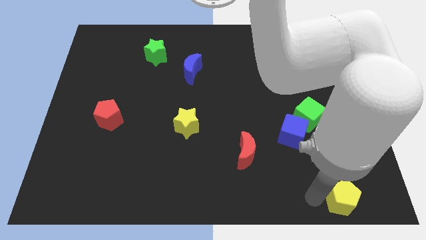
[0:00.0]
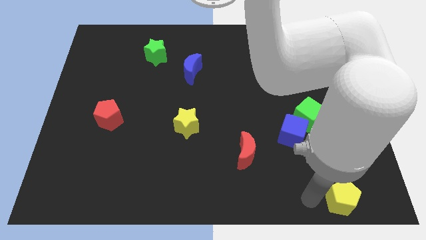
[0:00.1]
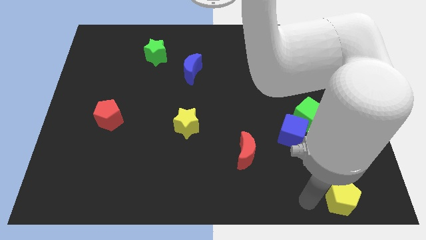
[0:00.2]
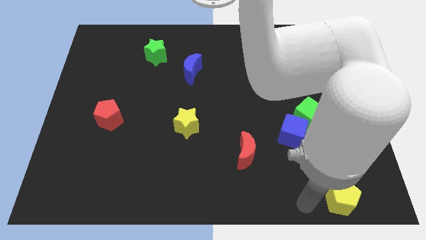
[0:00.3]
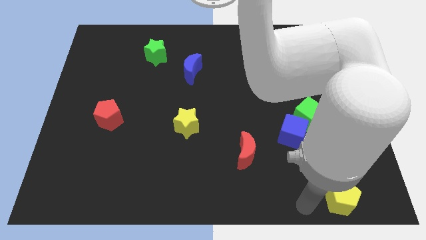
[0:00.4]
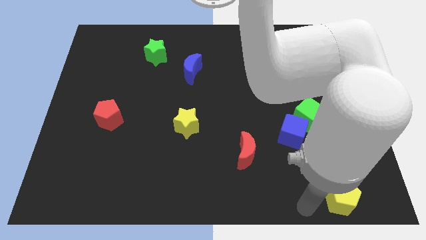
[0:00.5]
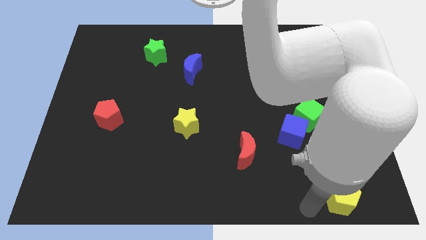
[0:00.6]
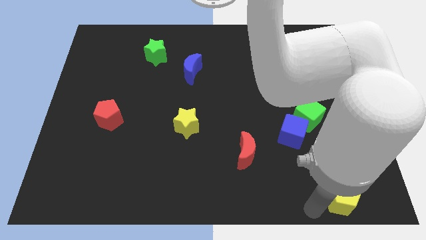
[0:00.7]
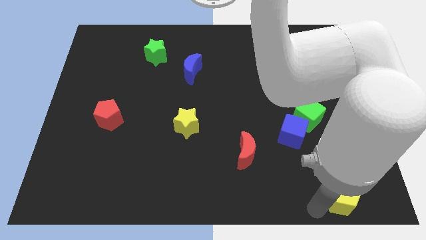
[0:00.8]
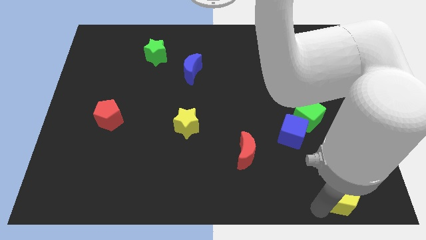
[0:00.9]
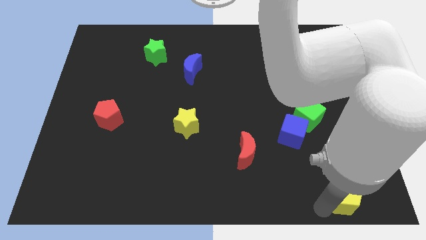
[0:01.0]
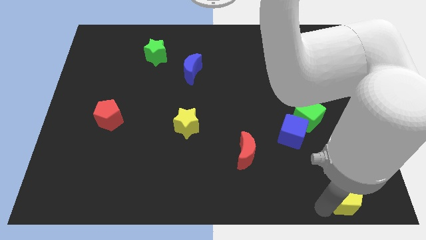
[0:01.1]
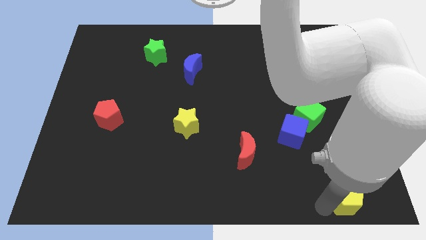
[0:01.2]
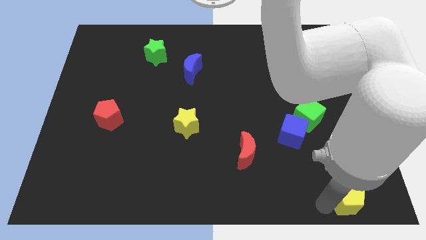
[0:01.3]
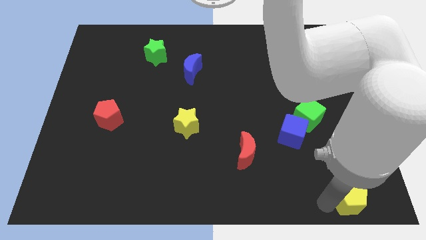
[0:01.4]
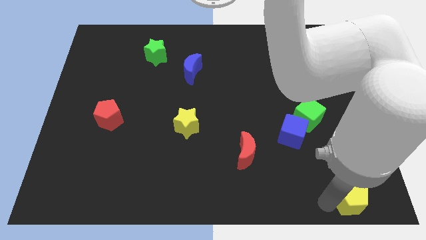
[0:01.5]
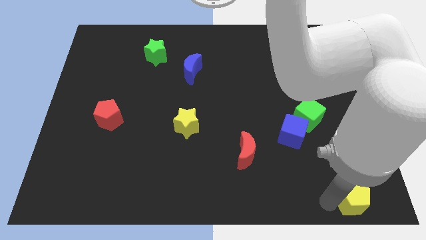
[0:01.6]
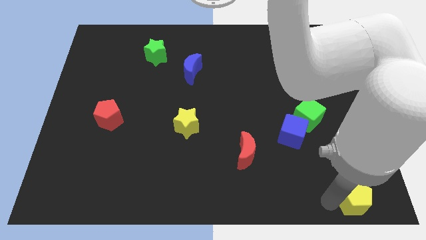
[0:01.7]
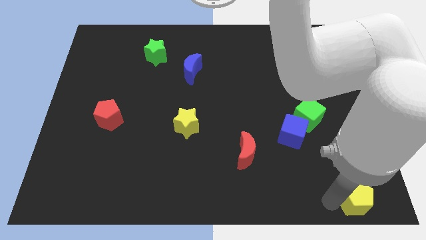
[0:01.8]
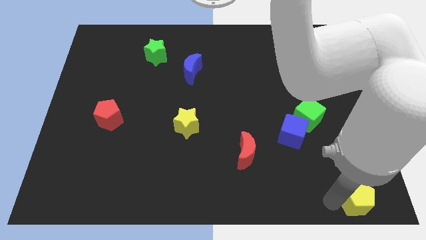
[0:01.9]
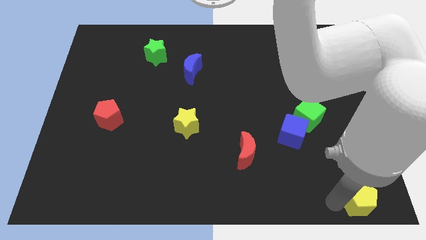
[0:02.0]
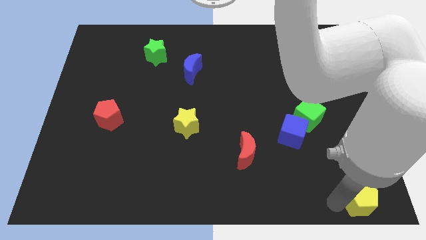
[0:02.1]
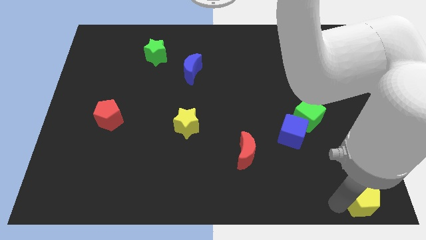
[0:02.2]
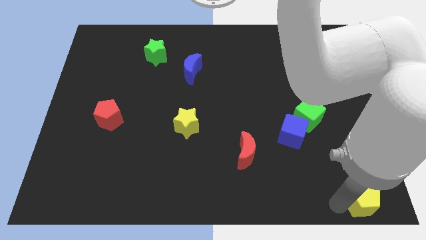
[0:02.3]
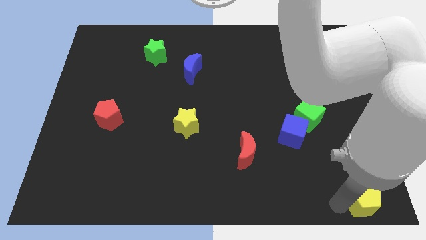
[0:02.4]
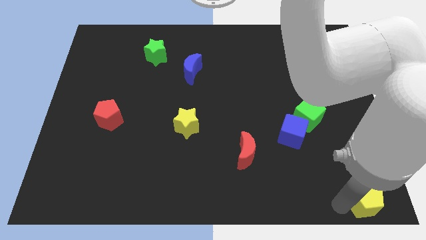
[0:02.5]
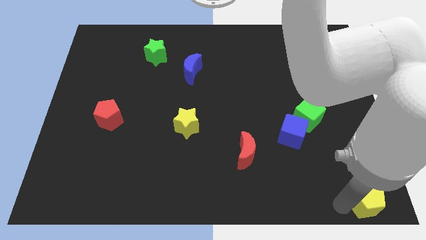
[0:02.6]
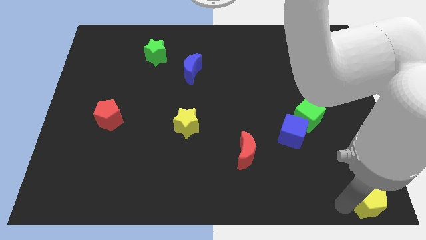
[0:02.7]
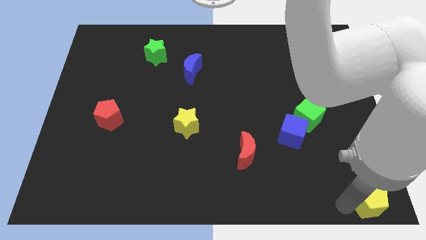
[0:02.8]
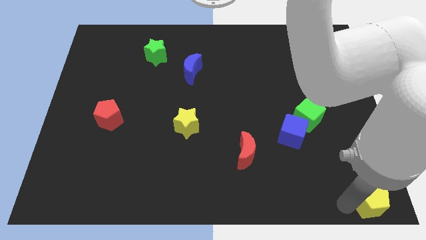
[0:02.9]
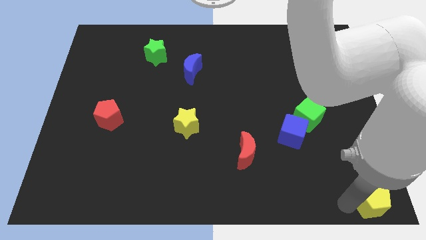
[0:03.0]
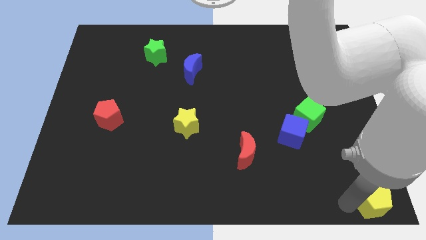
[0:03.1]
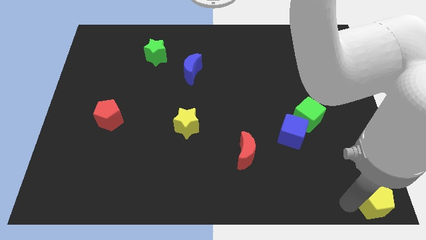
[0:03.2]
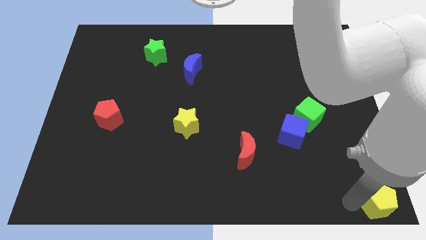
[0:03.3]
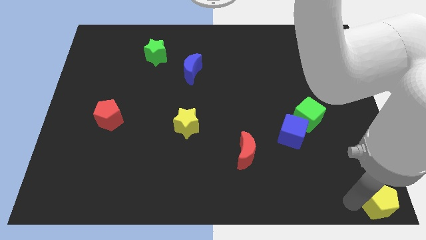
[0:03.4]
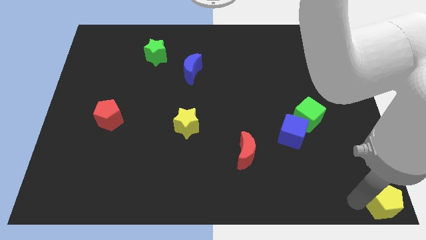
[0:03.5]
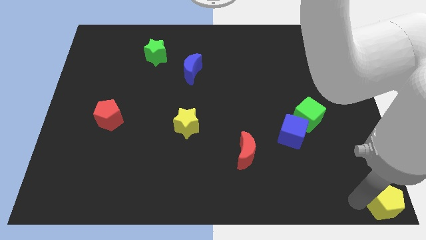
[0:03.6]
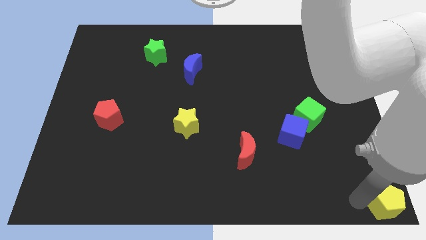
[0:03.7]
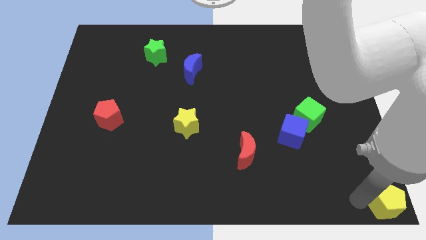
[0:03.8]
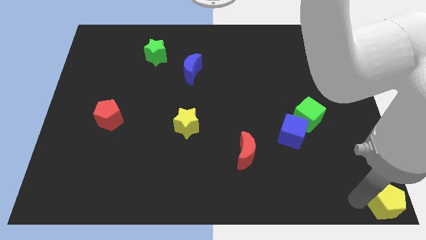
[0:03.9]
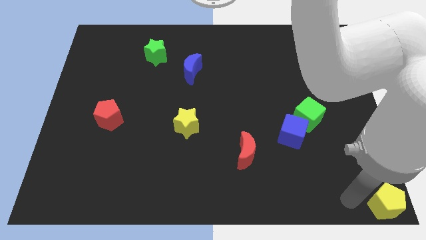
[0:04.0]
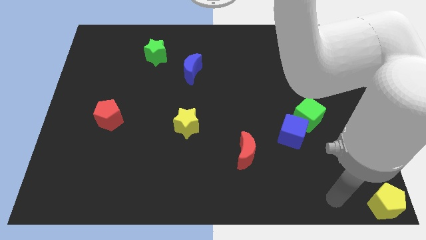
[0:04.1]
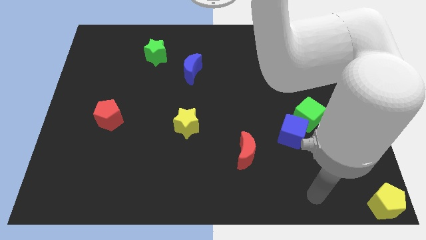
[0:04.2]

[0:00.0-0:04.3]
move the yellow pentagon at the bottom right corner of the board

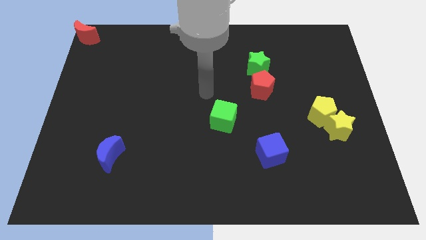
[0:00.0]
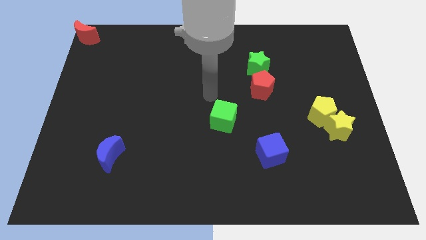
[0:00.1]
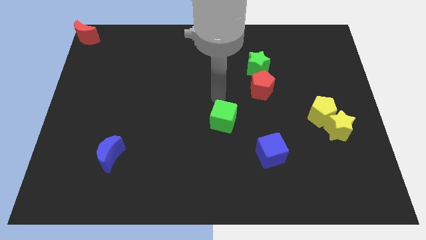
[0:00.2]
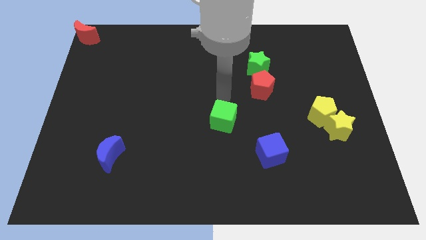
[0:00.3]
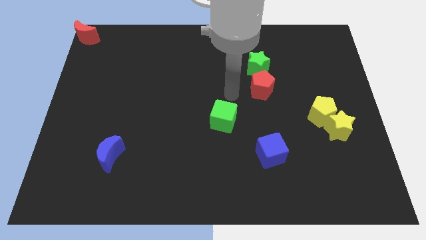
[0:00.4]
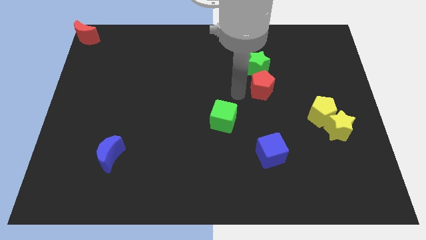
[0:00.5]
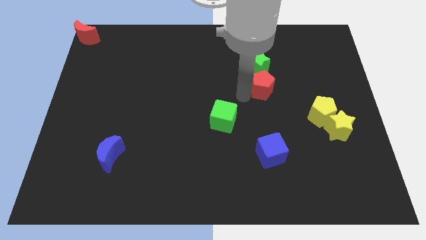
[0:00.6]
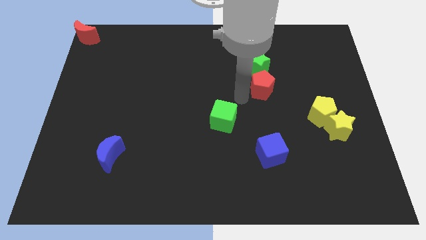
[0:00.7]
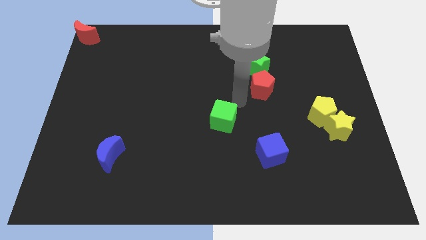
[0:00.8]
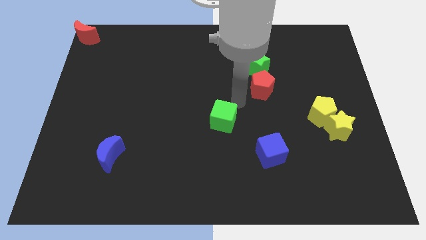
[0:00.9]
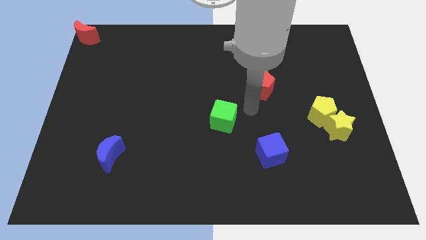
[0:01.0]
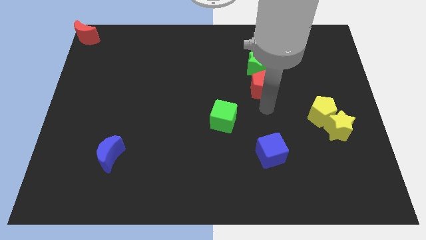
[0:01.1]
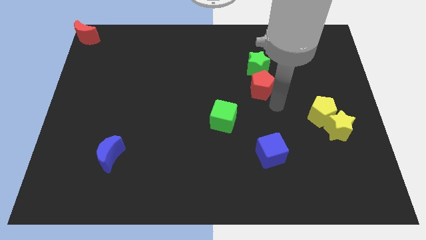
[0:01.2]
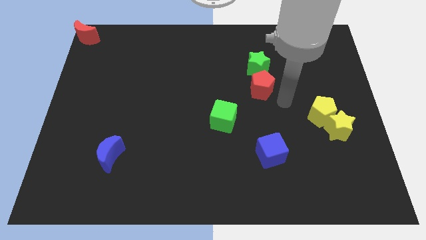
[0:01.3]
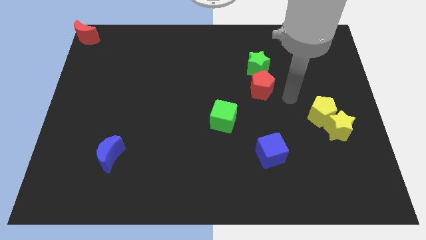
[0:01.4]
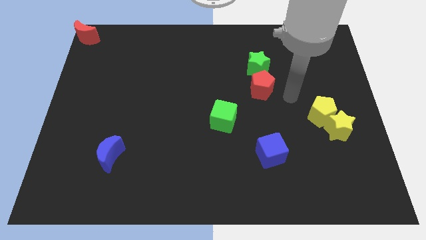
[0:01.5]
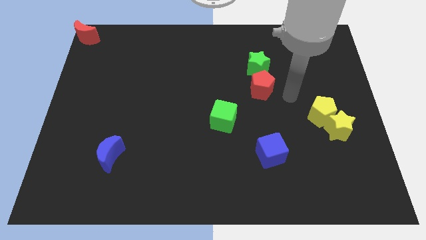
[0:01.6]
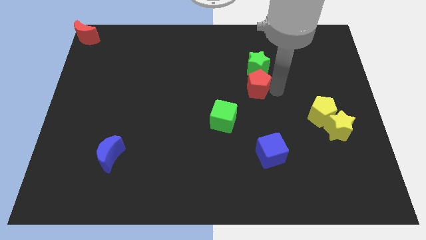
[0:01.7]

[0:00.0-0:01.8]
point your arm at the right side of the red pentagon

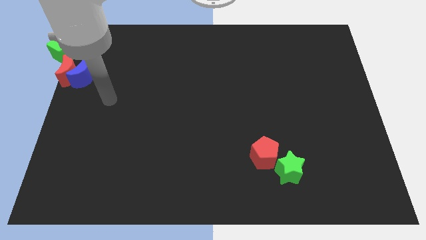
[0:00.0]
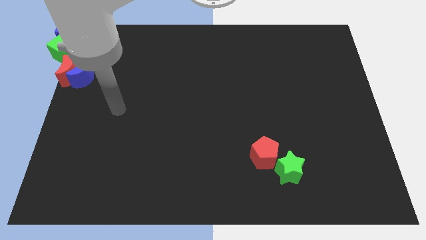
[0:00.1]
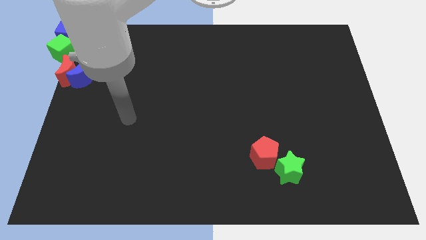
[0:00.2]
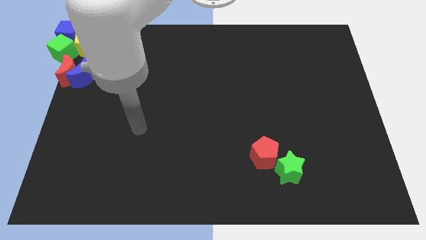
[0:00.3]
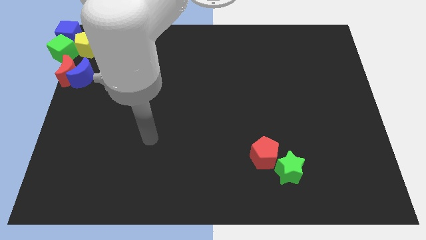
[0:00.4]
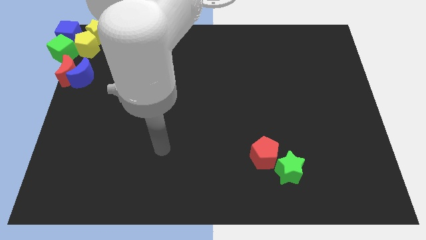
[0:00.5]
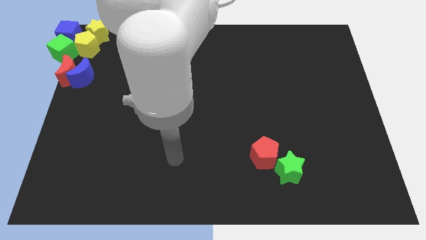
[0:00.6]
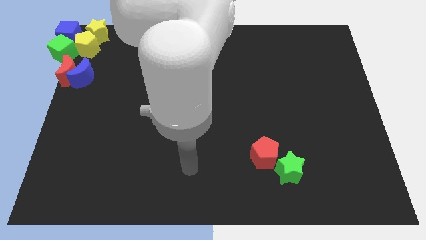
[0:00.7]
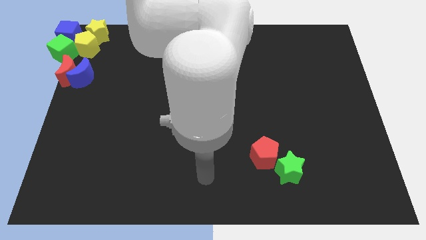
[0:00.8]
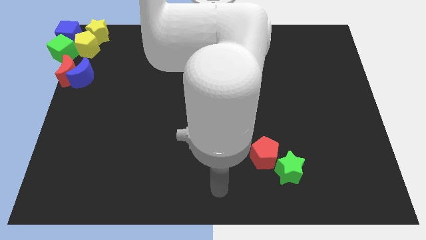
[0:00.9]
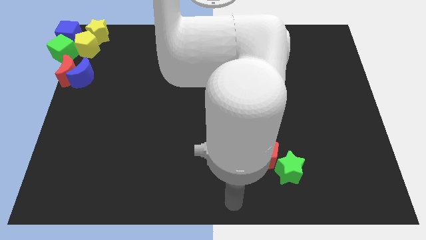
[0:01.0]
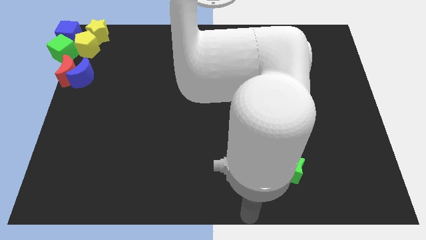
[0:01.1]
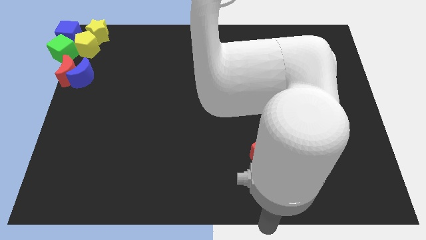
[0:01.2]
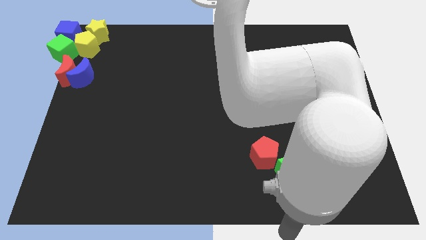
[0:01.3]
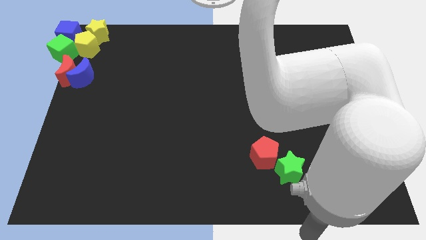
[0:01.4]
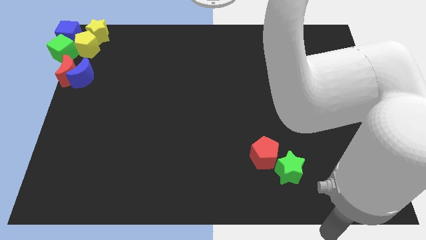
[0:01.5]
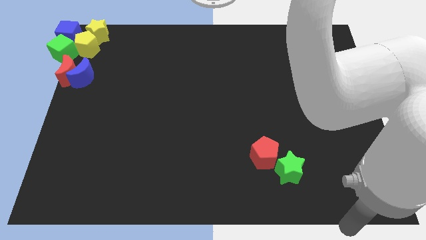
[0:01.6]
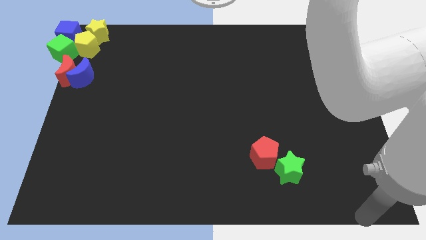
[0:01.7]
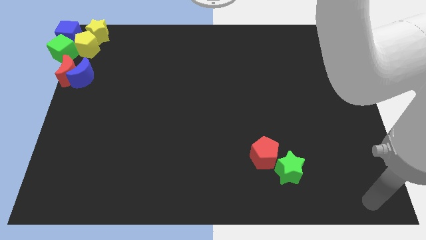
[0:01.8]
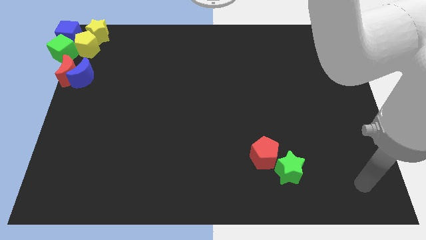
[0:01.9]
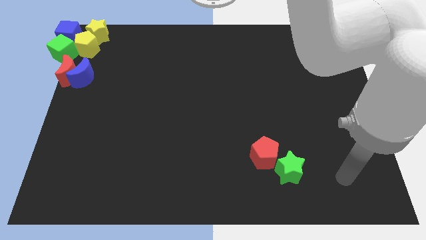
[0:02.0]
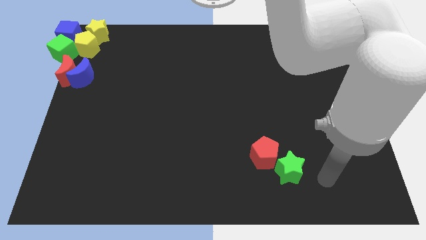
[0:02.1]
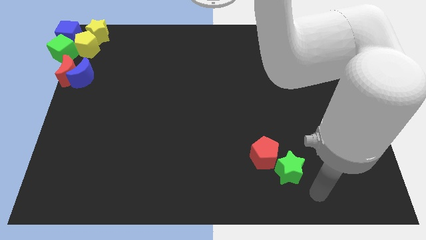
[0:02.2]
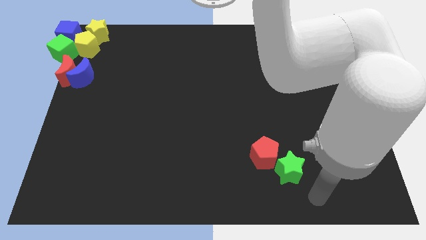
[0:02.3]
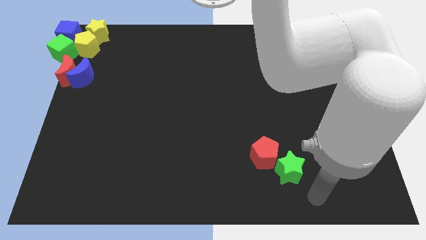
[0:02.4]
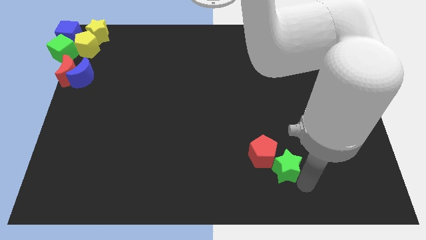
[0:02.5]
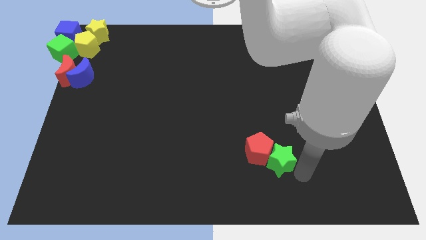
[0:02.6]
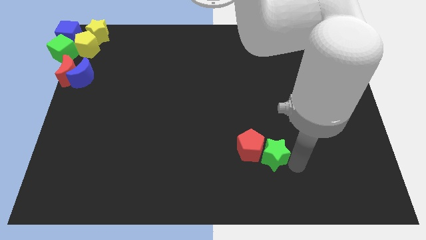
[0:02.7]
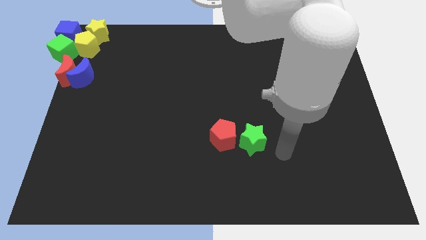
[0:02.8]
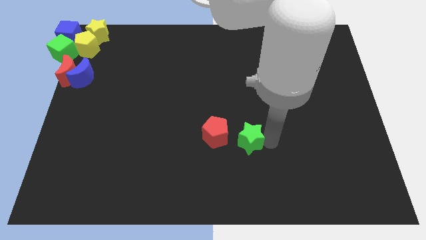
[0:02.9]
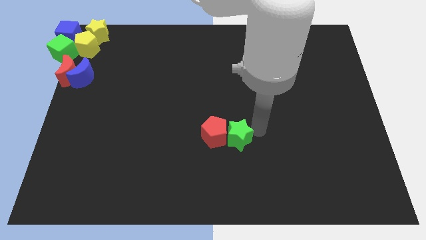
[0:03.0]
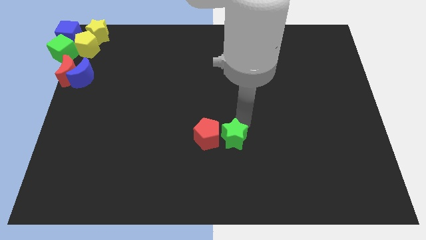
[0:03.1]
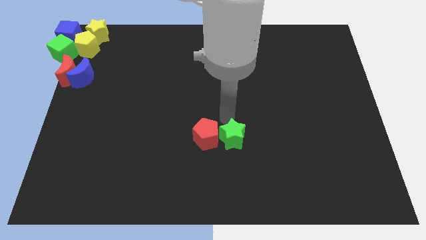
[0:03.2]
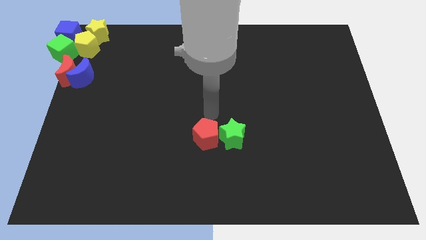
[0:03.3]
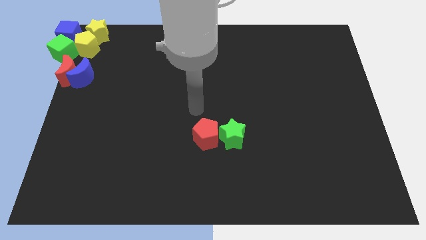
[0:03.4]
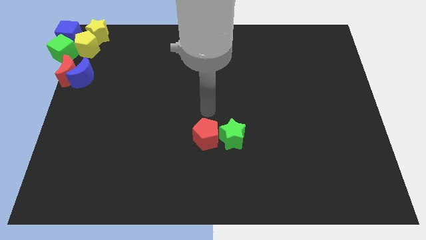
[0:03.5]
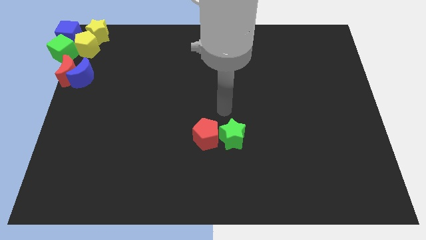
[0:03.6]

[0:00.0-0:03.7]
push the green star and red pentagon towards the left side of the board
